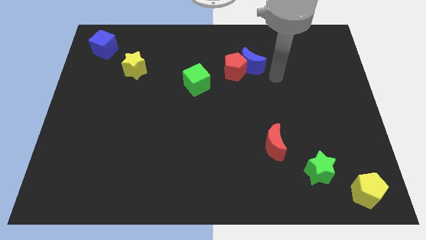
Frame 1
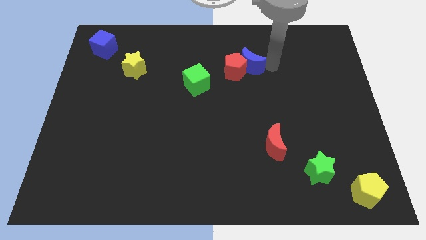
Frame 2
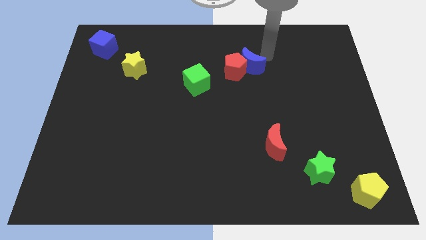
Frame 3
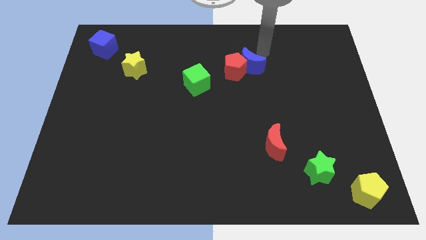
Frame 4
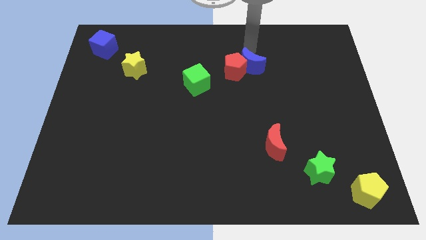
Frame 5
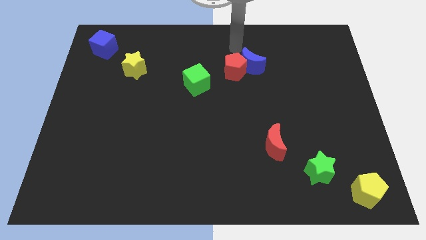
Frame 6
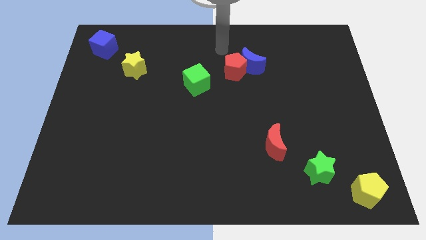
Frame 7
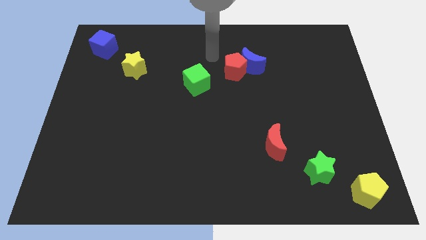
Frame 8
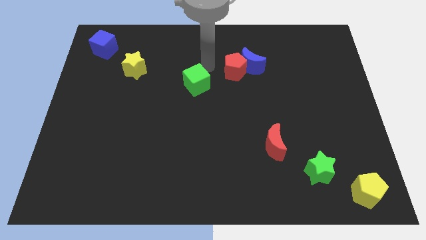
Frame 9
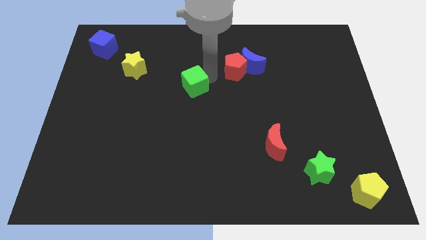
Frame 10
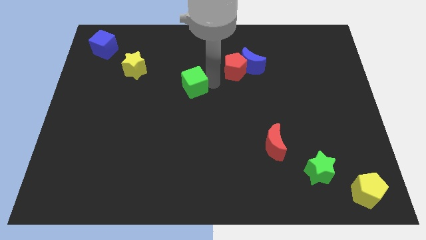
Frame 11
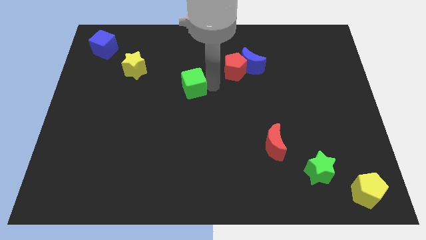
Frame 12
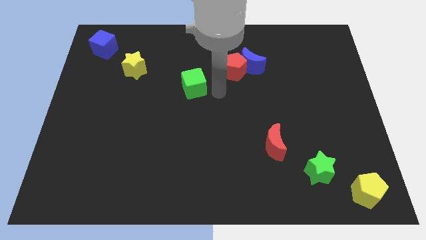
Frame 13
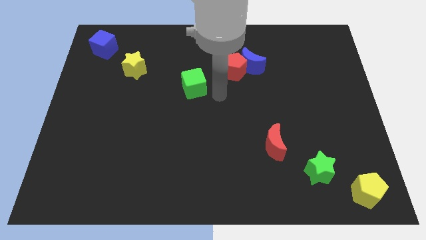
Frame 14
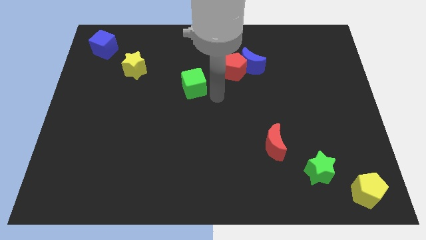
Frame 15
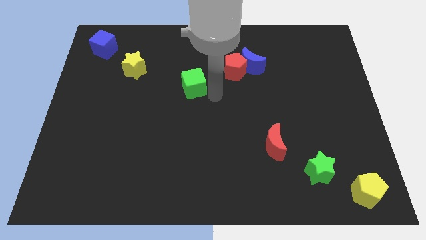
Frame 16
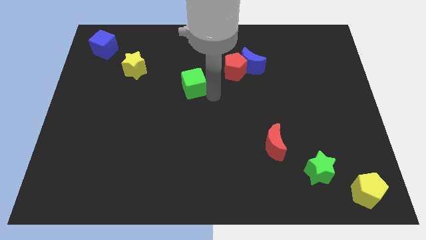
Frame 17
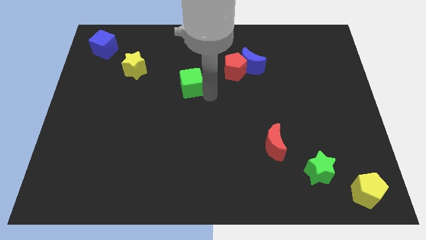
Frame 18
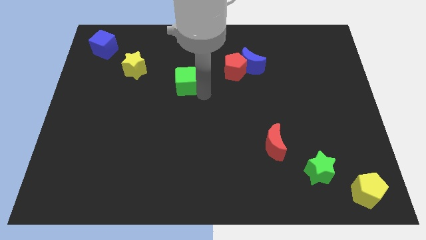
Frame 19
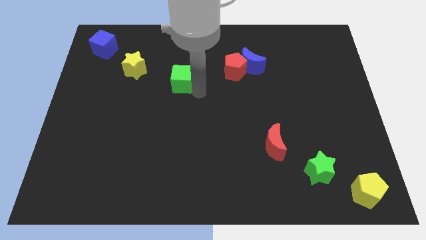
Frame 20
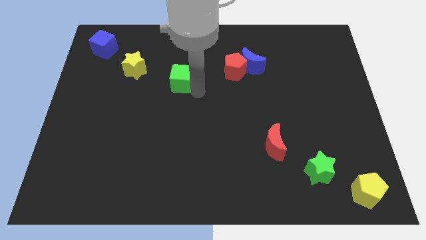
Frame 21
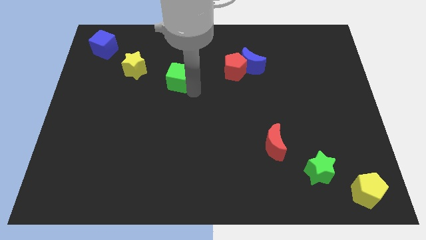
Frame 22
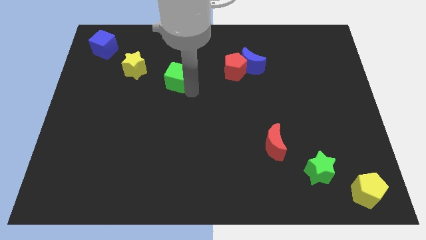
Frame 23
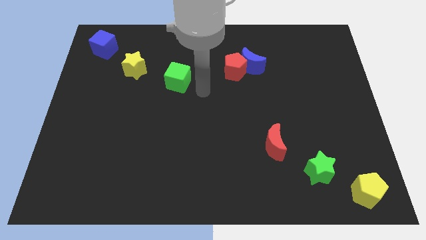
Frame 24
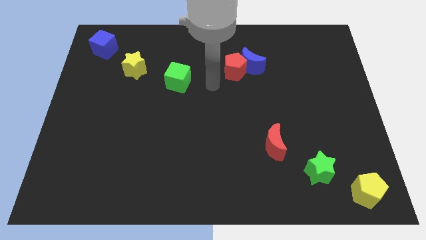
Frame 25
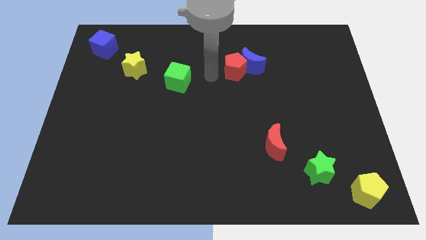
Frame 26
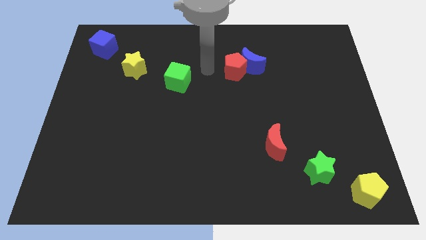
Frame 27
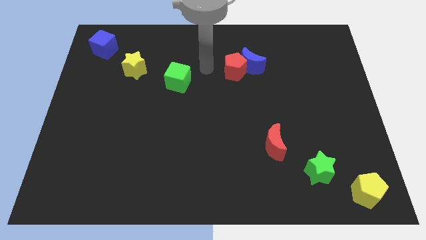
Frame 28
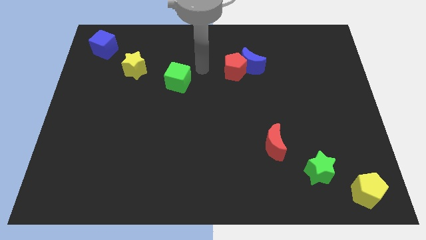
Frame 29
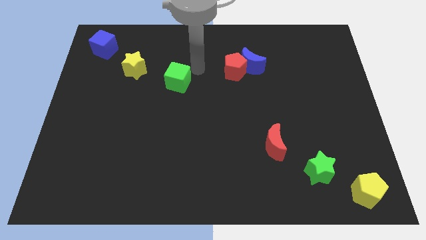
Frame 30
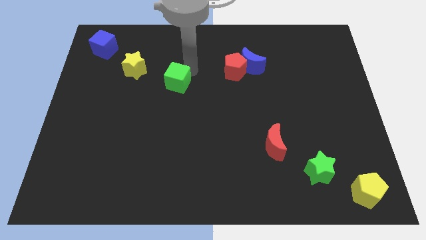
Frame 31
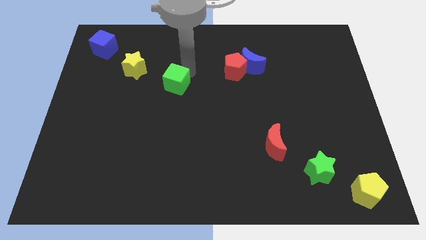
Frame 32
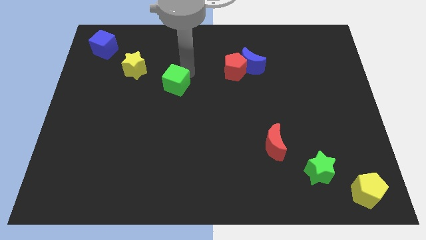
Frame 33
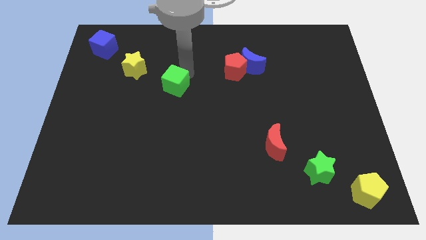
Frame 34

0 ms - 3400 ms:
place the green cube diagonally below the right side of the yellow star

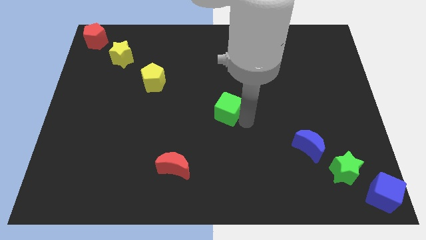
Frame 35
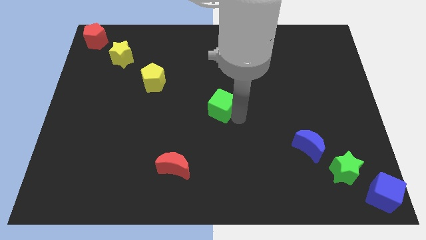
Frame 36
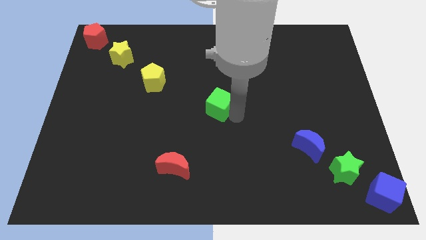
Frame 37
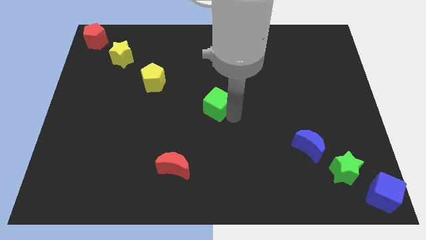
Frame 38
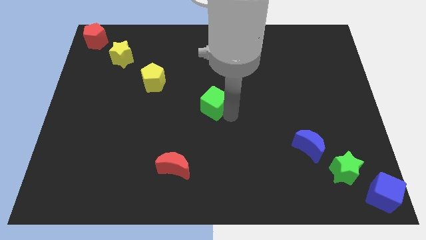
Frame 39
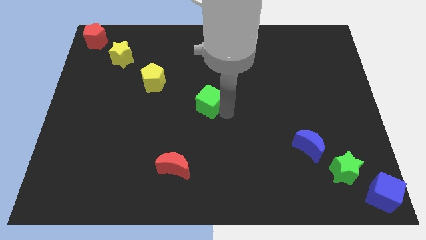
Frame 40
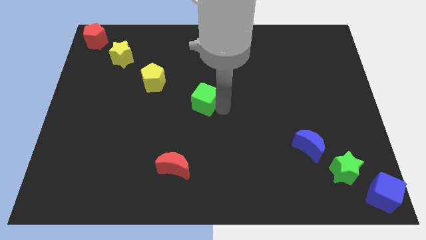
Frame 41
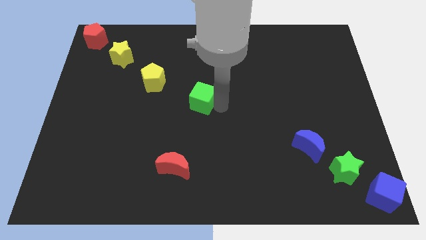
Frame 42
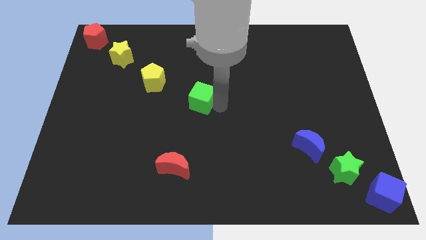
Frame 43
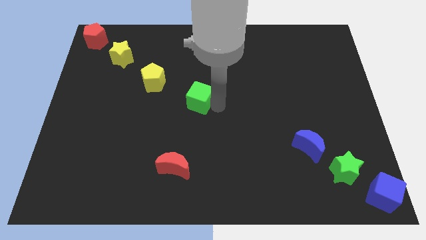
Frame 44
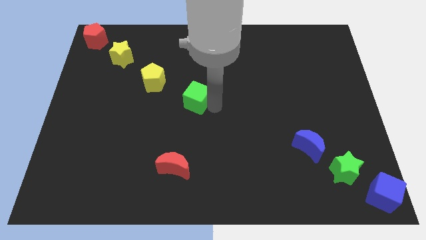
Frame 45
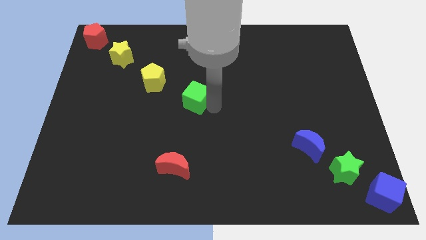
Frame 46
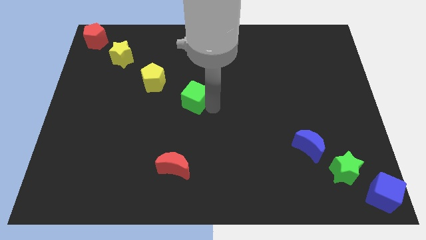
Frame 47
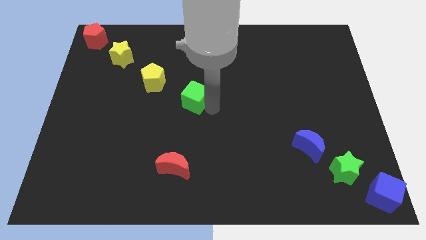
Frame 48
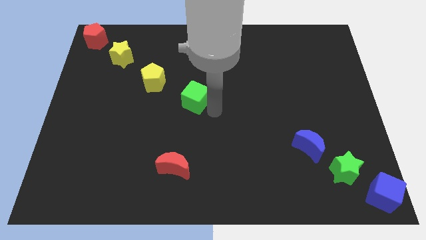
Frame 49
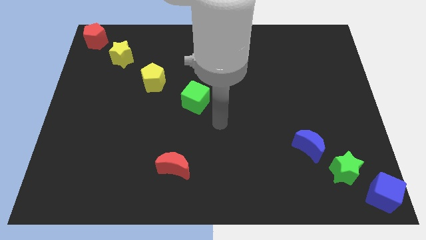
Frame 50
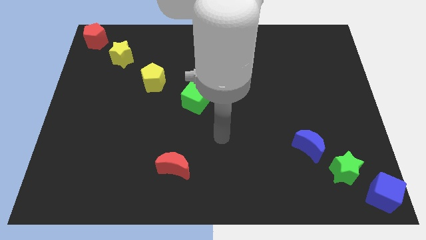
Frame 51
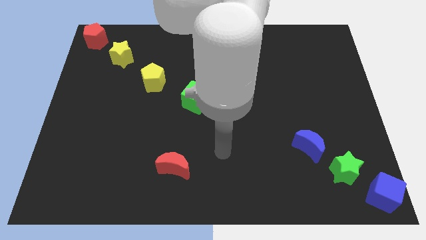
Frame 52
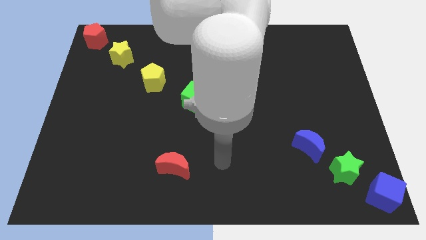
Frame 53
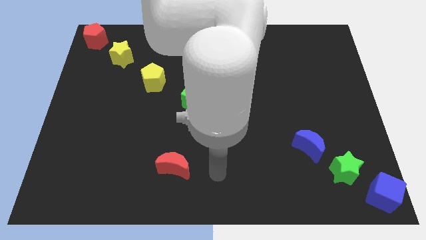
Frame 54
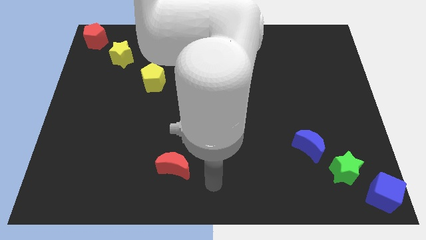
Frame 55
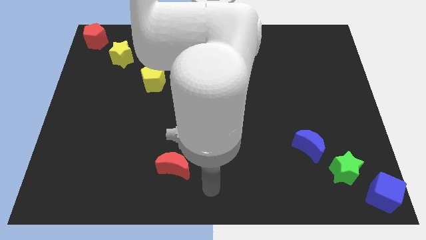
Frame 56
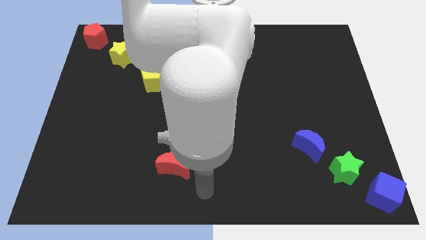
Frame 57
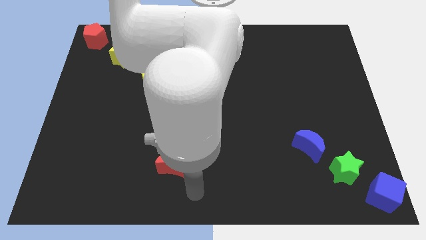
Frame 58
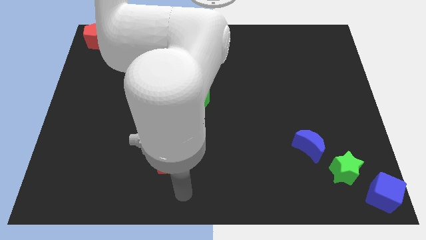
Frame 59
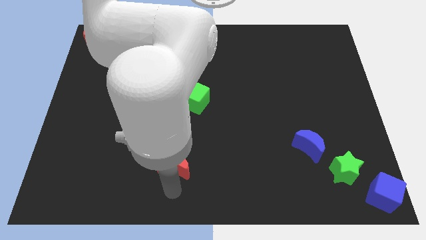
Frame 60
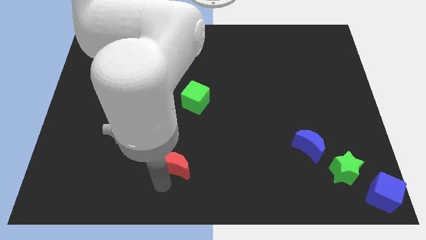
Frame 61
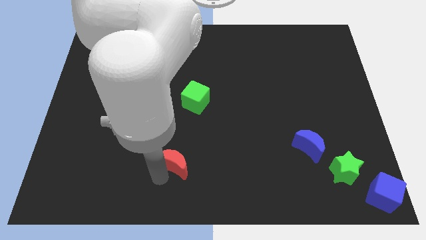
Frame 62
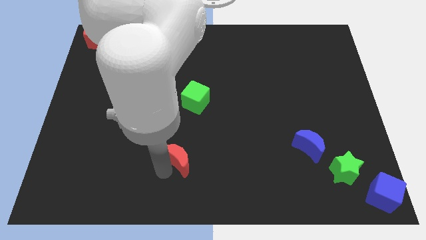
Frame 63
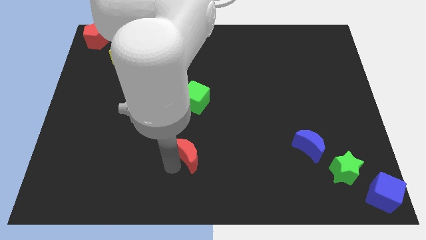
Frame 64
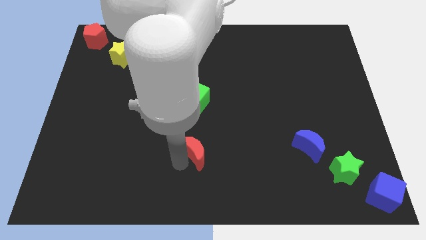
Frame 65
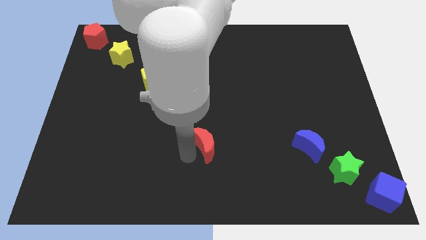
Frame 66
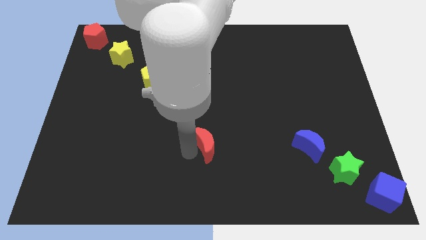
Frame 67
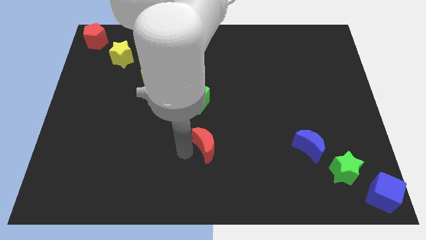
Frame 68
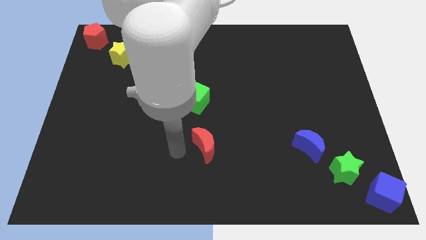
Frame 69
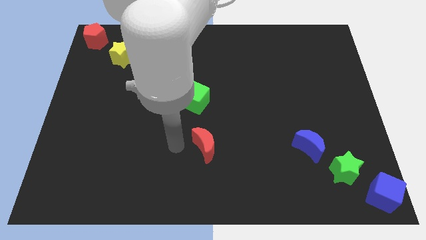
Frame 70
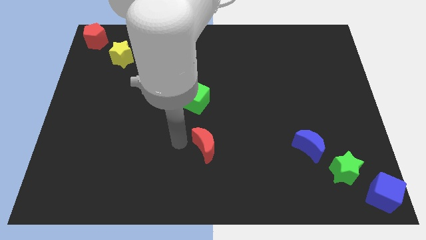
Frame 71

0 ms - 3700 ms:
move red crescent to the bottom of green cube

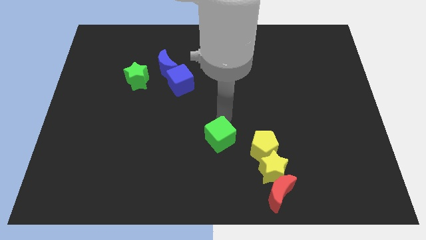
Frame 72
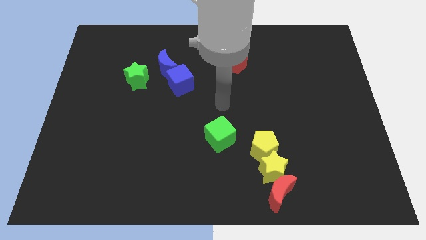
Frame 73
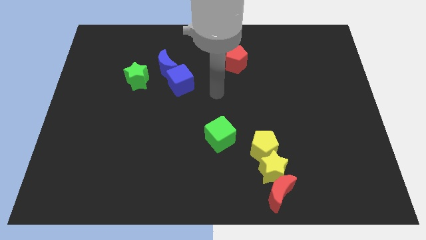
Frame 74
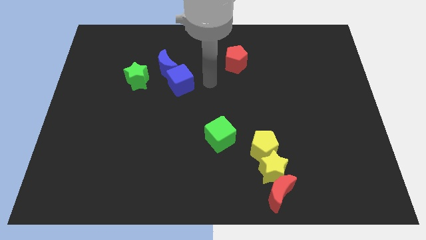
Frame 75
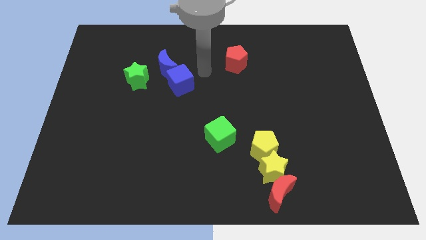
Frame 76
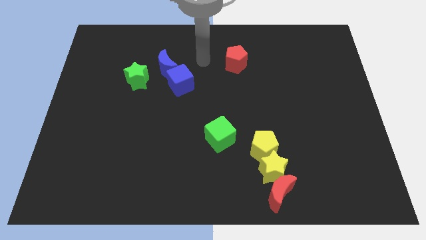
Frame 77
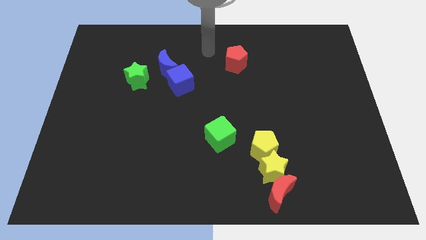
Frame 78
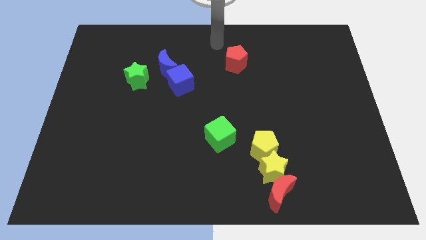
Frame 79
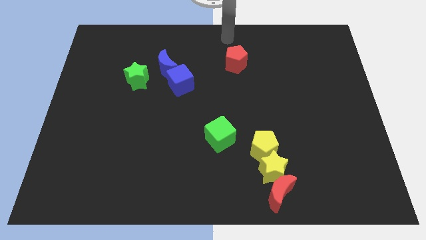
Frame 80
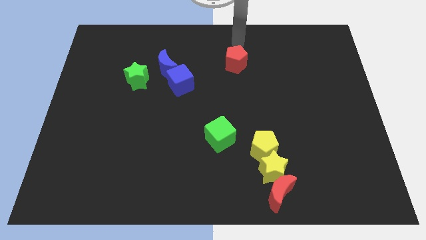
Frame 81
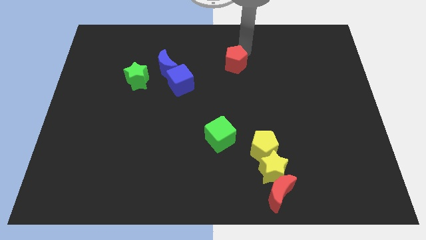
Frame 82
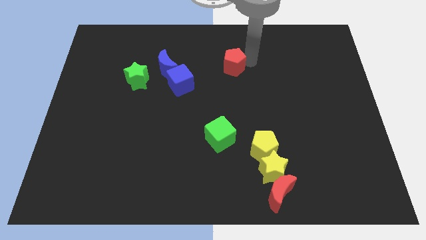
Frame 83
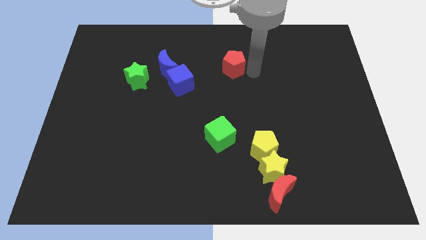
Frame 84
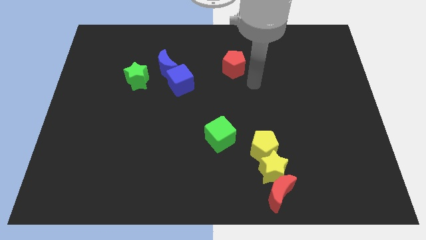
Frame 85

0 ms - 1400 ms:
slightly push down the red pentagon

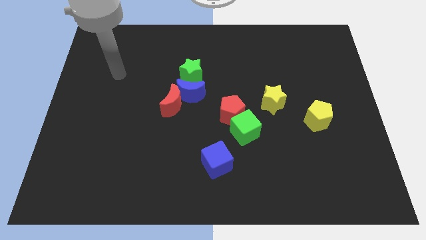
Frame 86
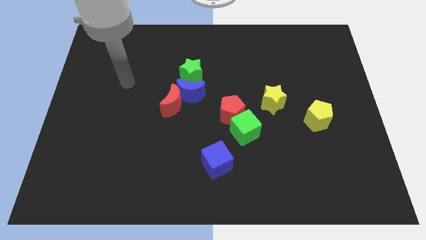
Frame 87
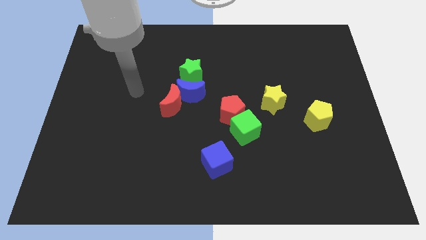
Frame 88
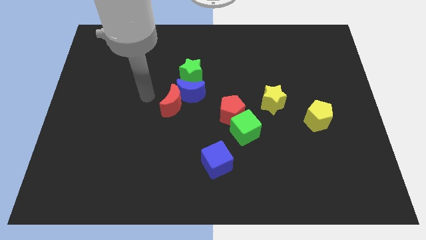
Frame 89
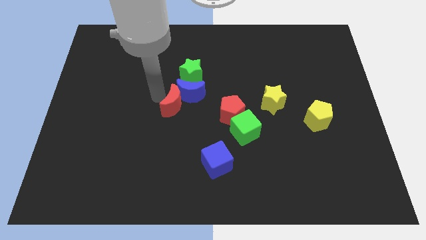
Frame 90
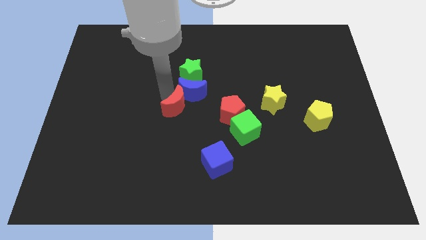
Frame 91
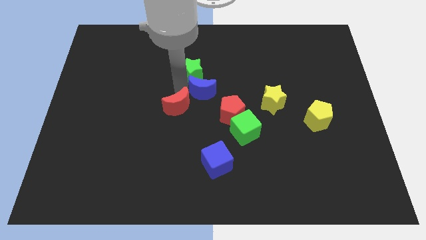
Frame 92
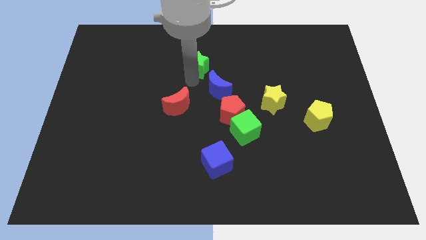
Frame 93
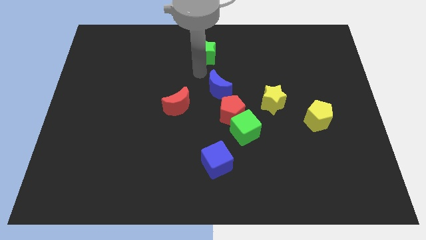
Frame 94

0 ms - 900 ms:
separate the red moon and blue moon
